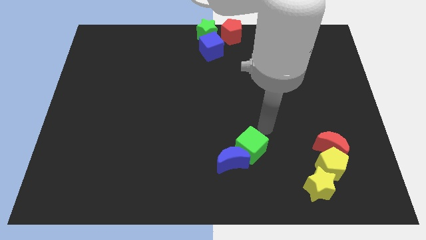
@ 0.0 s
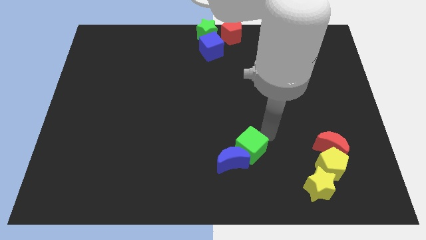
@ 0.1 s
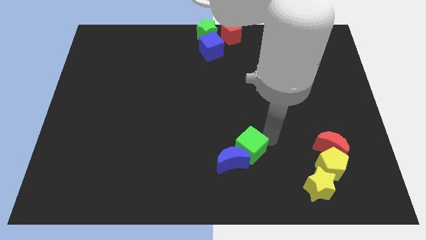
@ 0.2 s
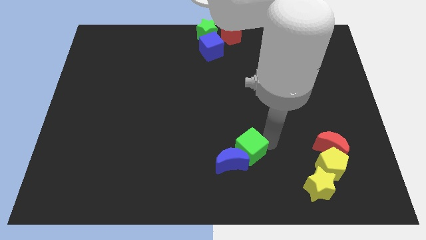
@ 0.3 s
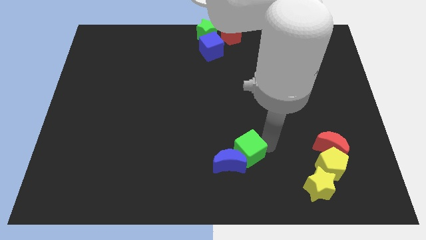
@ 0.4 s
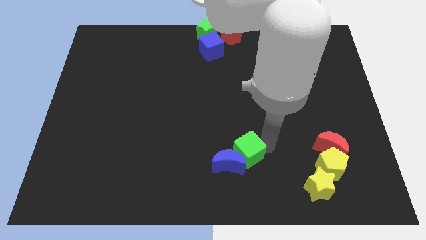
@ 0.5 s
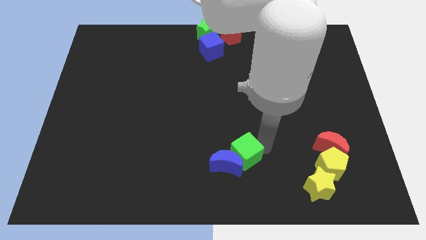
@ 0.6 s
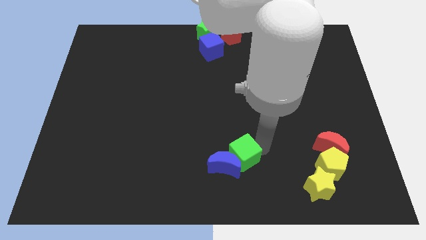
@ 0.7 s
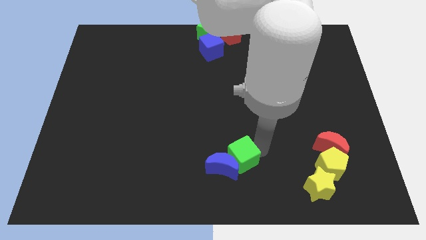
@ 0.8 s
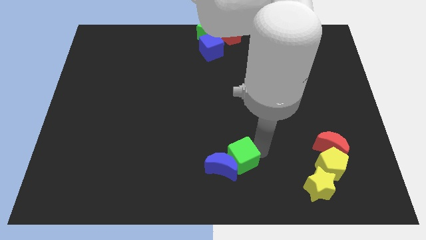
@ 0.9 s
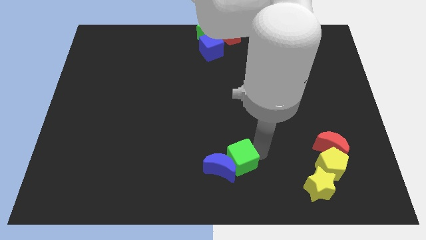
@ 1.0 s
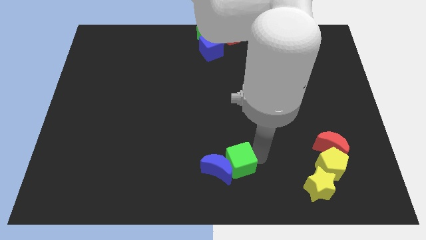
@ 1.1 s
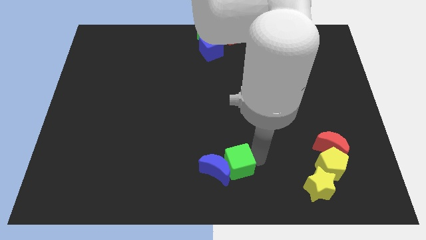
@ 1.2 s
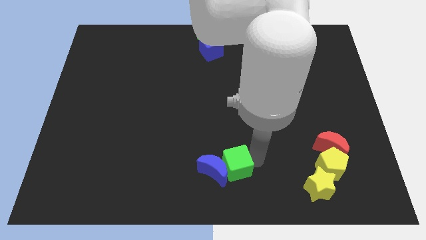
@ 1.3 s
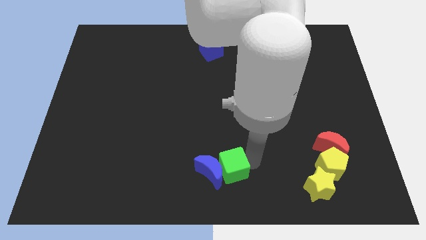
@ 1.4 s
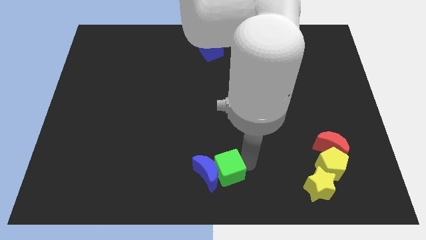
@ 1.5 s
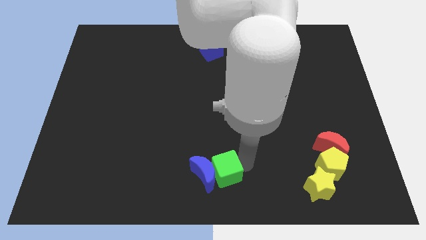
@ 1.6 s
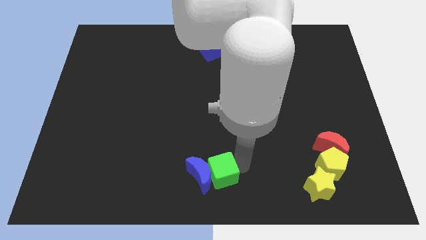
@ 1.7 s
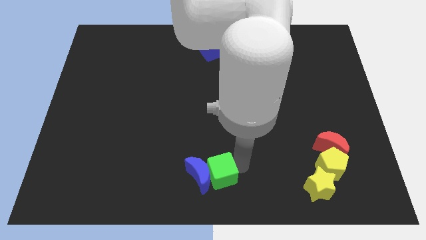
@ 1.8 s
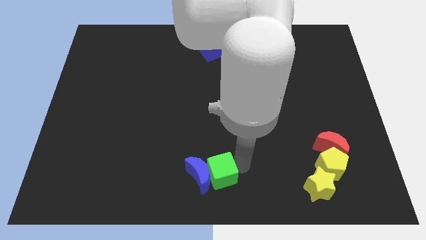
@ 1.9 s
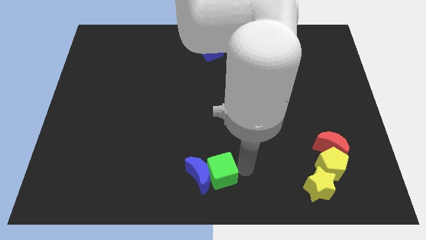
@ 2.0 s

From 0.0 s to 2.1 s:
push the blue crescent with the green cube towards the bottom center of the board

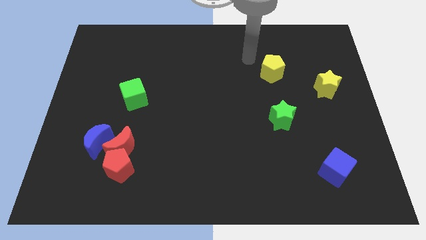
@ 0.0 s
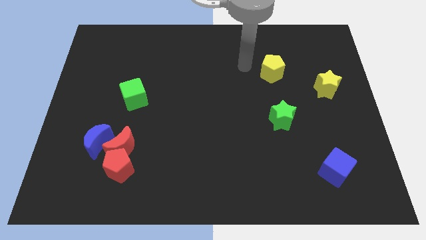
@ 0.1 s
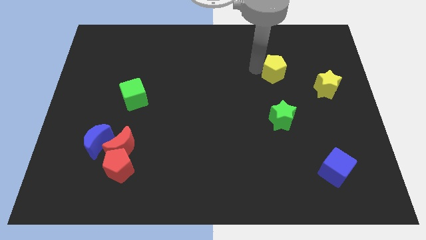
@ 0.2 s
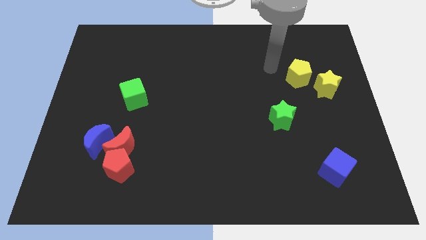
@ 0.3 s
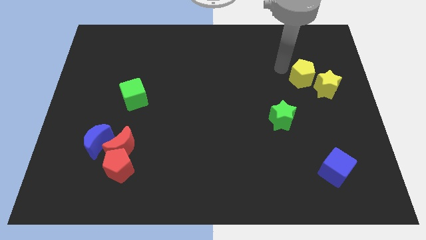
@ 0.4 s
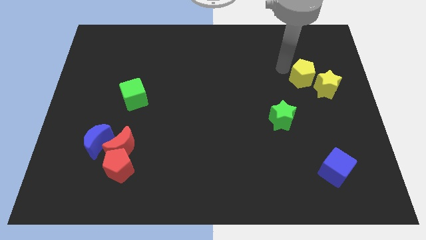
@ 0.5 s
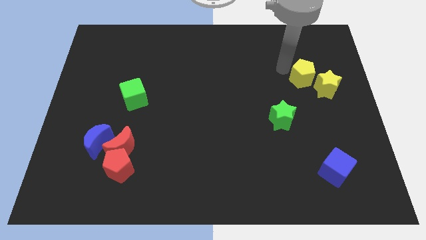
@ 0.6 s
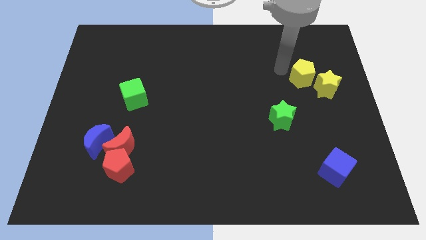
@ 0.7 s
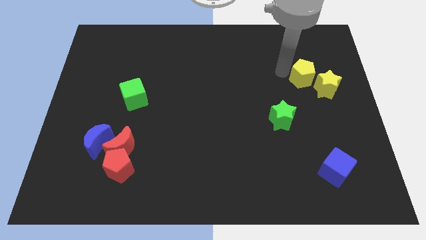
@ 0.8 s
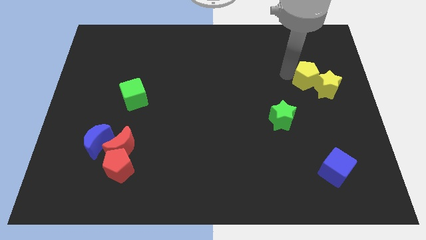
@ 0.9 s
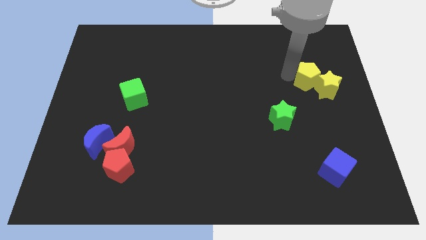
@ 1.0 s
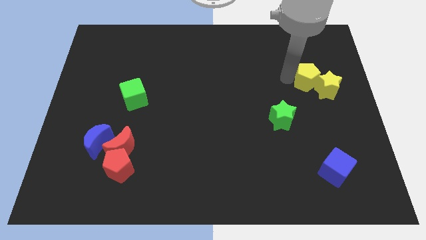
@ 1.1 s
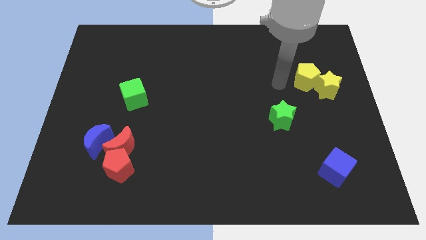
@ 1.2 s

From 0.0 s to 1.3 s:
move the yellow pentagon at the top right side of the green star

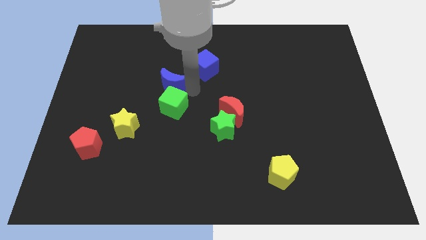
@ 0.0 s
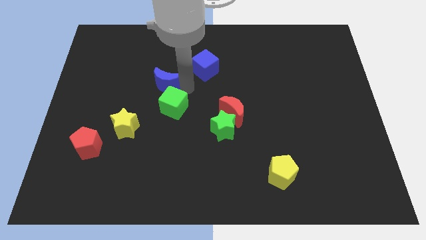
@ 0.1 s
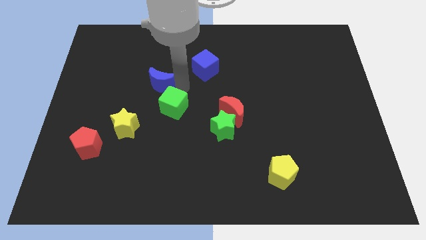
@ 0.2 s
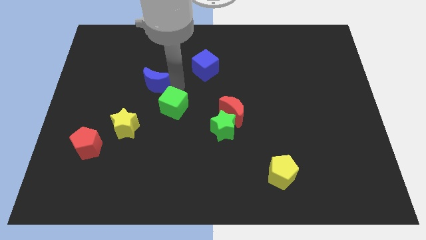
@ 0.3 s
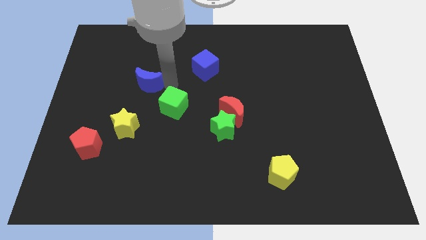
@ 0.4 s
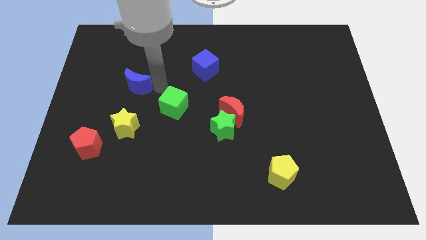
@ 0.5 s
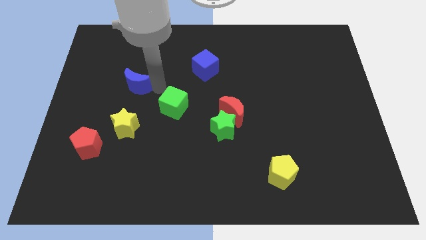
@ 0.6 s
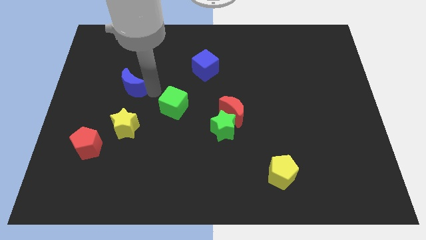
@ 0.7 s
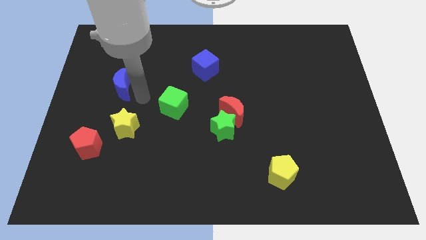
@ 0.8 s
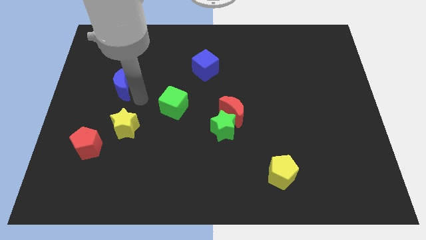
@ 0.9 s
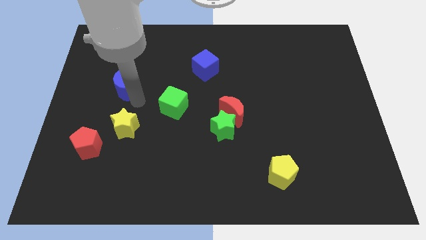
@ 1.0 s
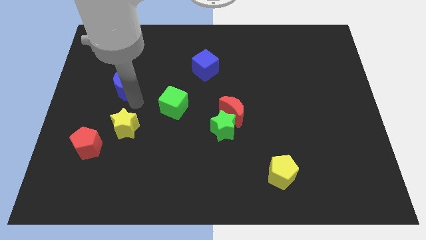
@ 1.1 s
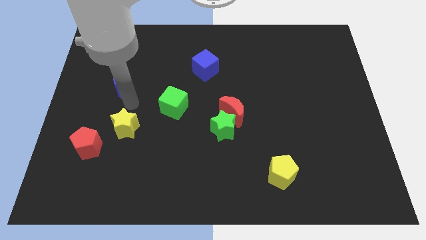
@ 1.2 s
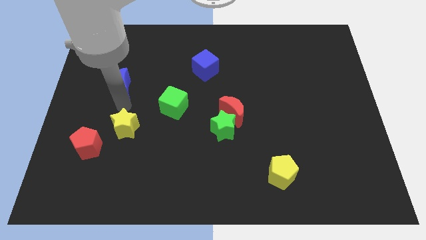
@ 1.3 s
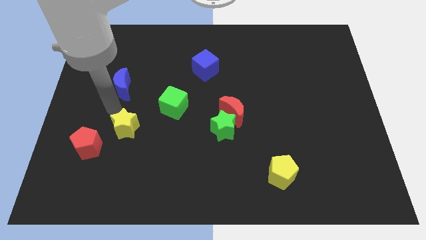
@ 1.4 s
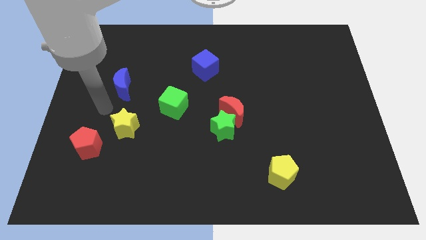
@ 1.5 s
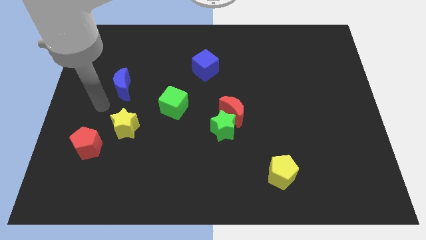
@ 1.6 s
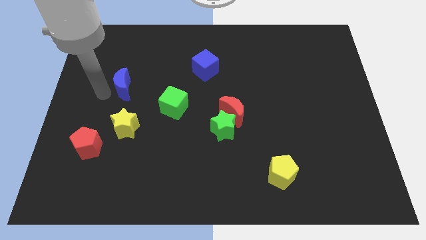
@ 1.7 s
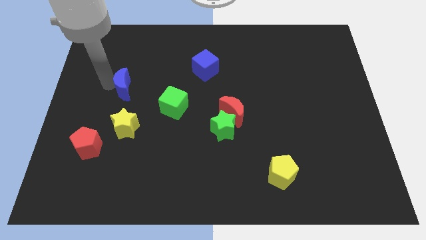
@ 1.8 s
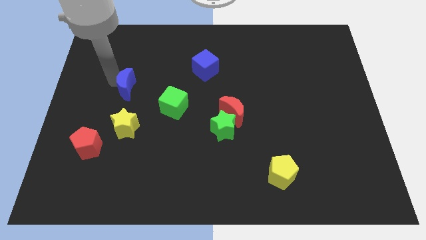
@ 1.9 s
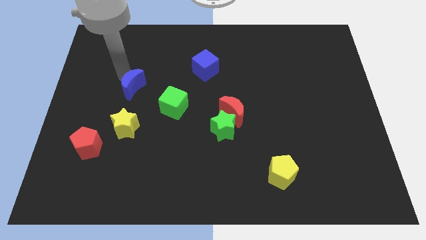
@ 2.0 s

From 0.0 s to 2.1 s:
separate the blue crescent from green cube

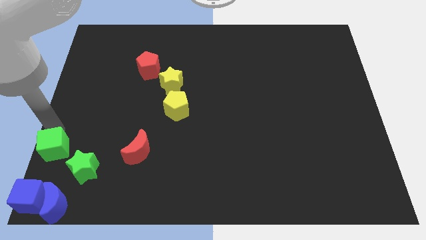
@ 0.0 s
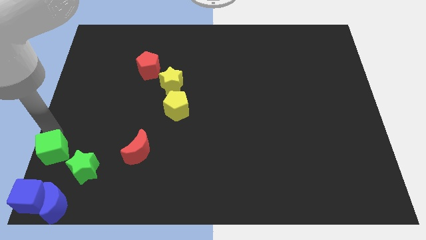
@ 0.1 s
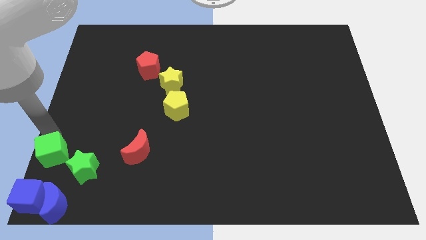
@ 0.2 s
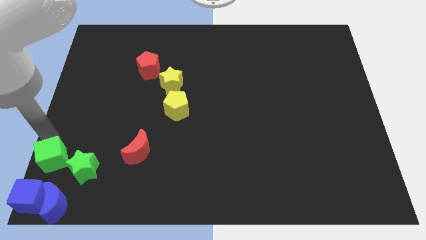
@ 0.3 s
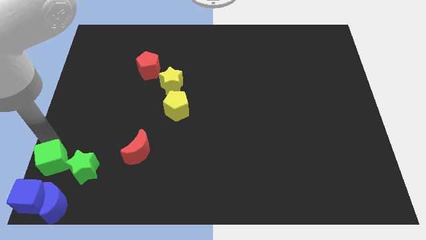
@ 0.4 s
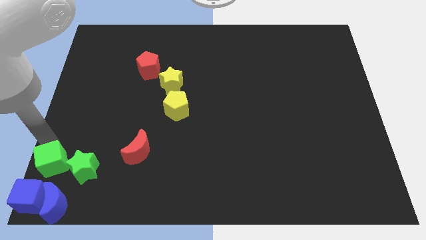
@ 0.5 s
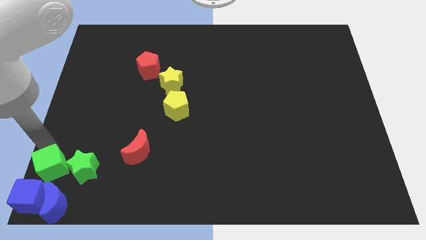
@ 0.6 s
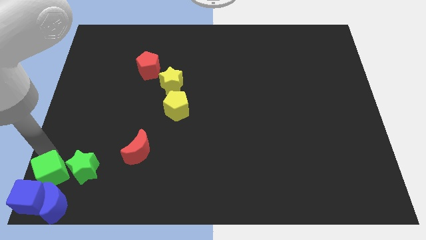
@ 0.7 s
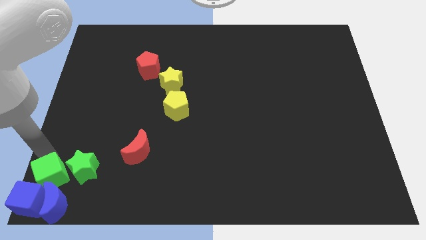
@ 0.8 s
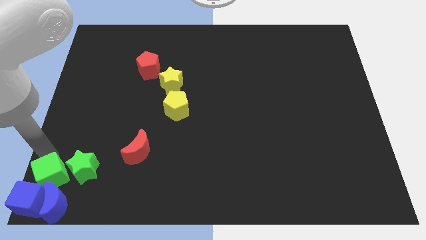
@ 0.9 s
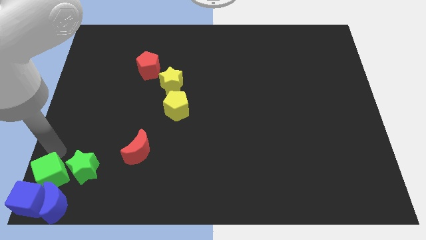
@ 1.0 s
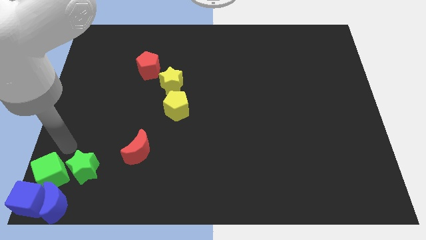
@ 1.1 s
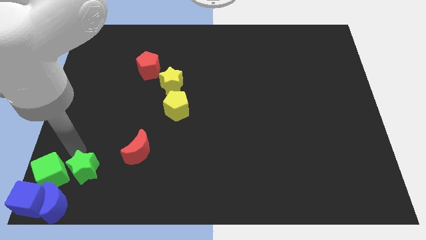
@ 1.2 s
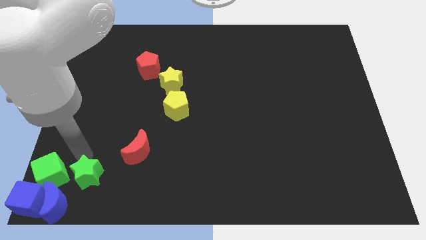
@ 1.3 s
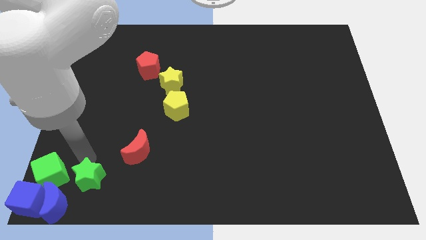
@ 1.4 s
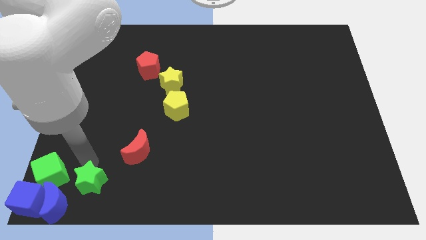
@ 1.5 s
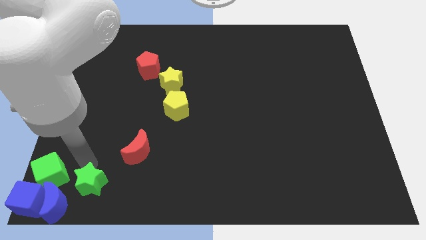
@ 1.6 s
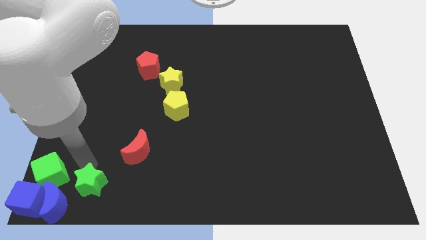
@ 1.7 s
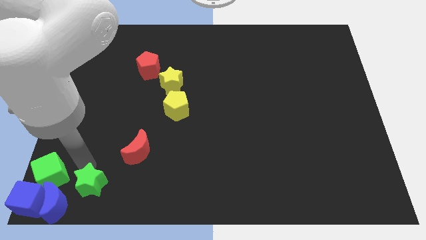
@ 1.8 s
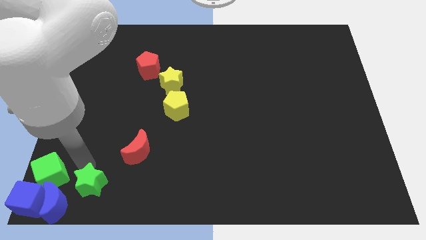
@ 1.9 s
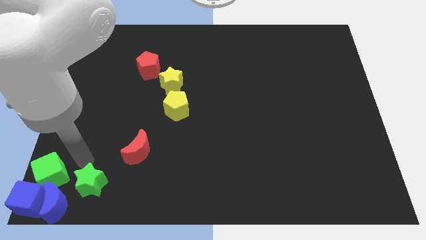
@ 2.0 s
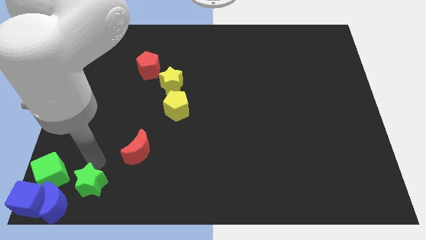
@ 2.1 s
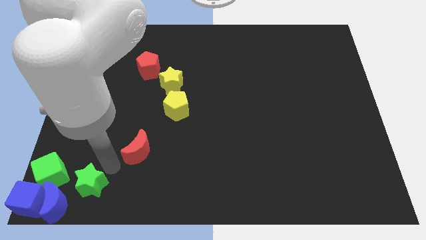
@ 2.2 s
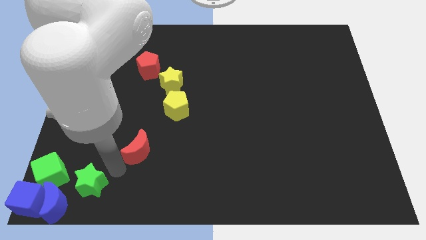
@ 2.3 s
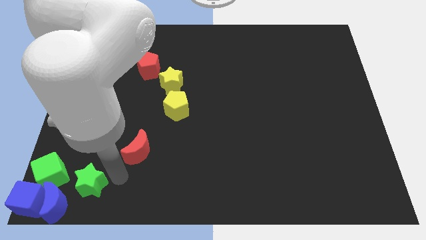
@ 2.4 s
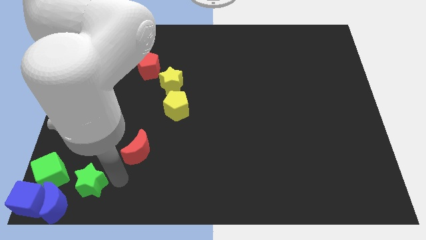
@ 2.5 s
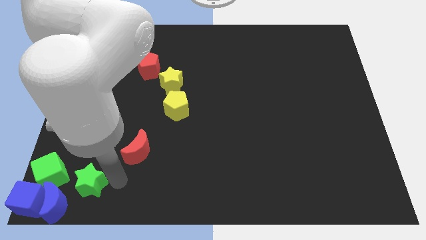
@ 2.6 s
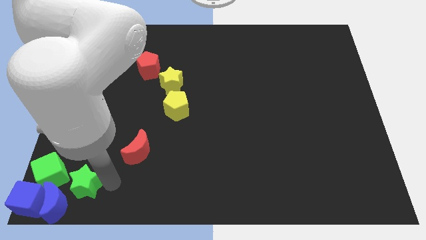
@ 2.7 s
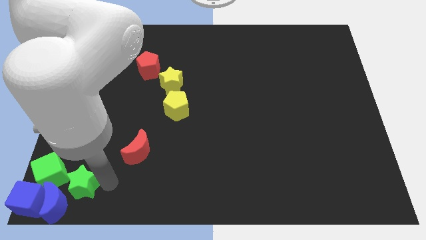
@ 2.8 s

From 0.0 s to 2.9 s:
place green star to the right of green cube

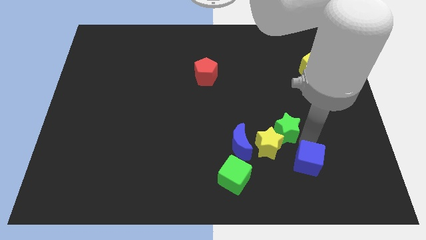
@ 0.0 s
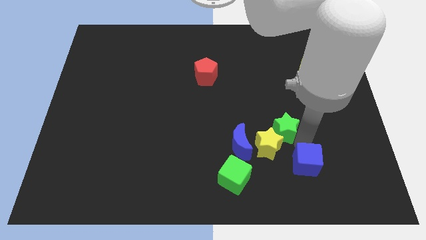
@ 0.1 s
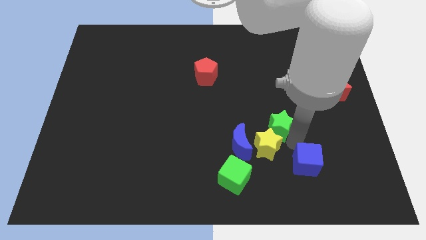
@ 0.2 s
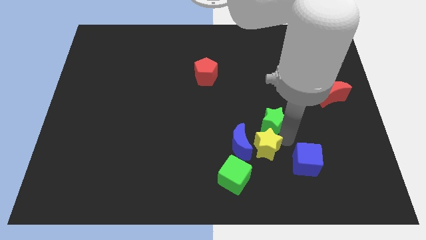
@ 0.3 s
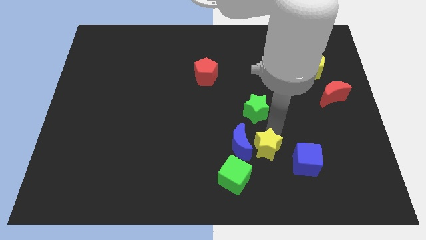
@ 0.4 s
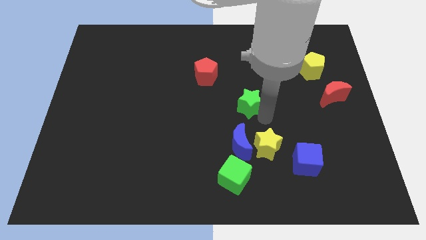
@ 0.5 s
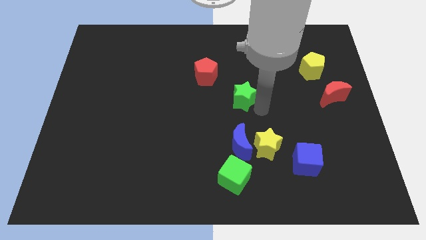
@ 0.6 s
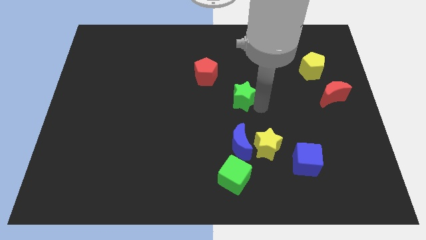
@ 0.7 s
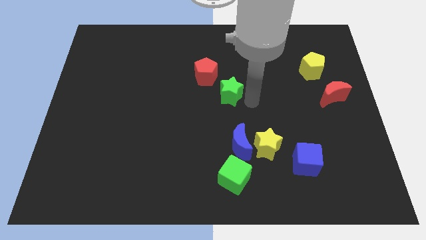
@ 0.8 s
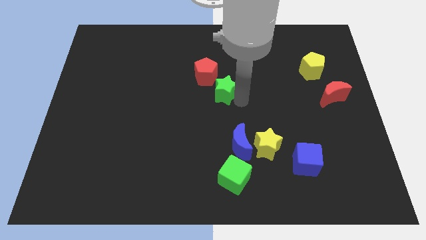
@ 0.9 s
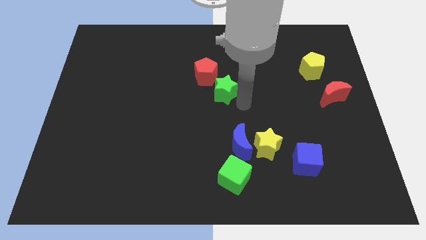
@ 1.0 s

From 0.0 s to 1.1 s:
place the green star close to the red pentagon
